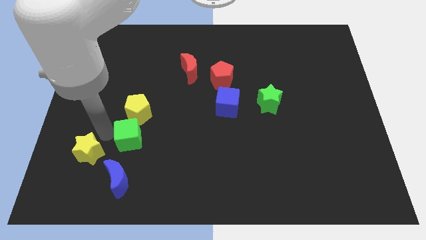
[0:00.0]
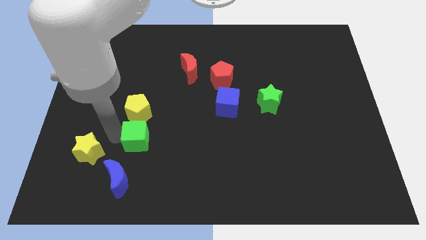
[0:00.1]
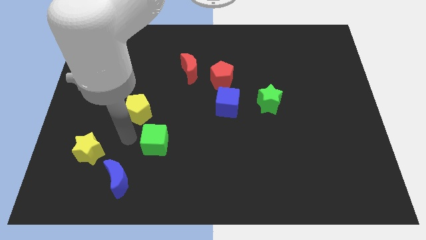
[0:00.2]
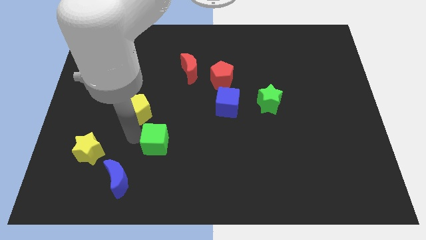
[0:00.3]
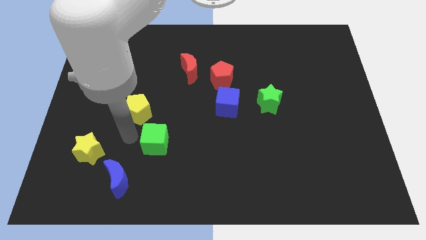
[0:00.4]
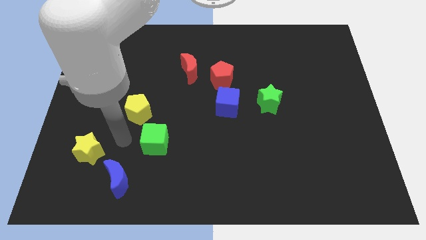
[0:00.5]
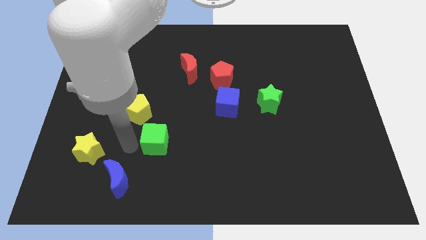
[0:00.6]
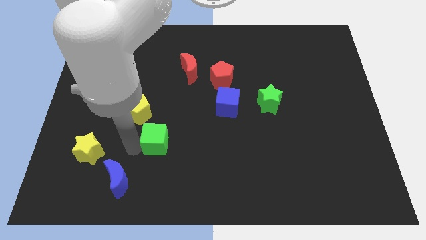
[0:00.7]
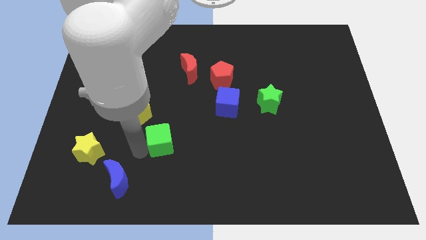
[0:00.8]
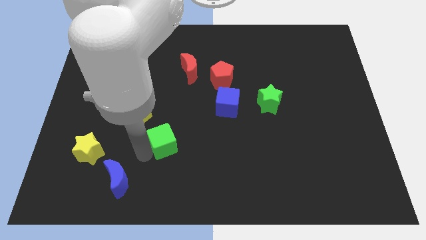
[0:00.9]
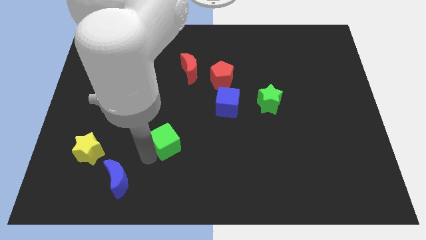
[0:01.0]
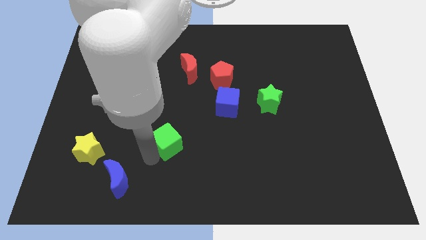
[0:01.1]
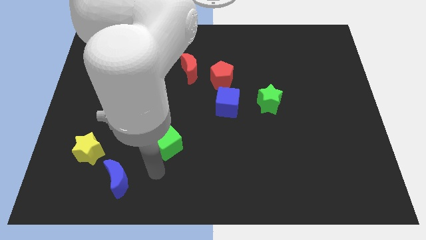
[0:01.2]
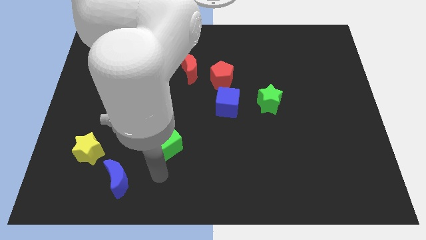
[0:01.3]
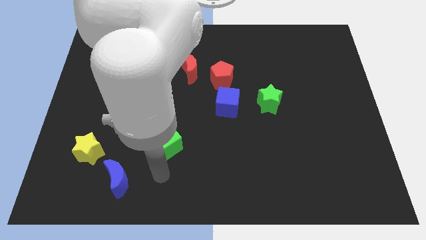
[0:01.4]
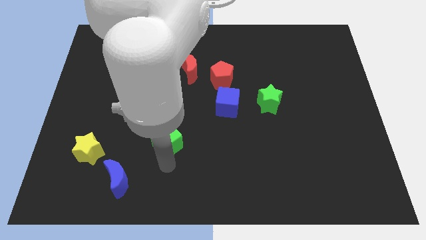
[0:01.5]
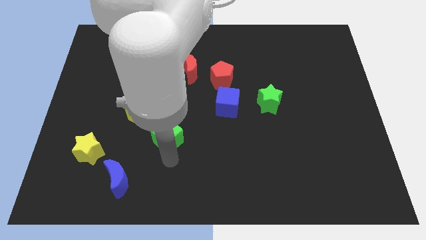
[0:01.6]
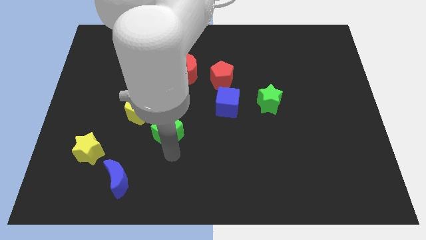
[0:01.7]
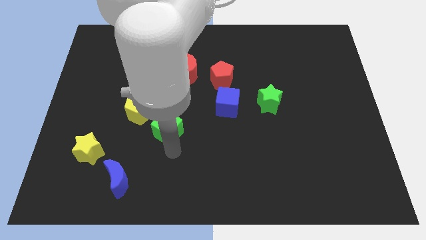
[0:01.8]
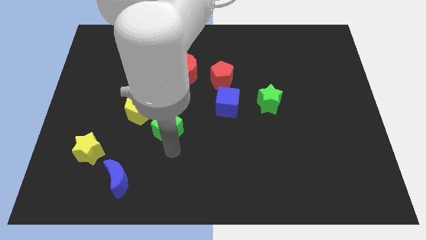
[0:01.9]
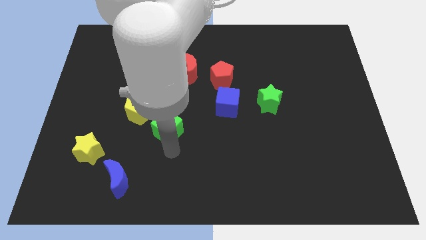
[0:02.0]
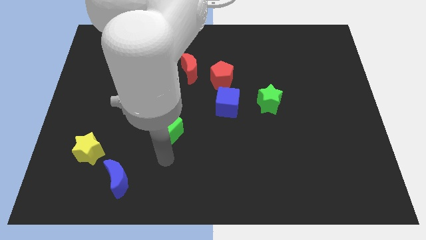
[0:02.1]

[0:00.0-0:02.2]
move green cube to the bottom right of yellow pentagon

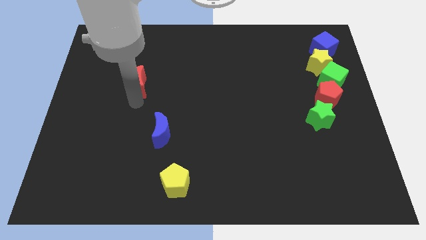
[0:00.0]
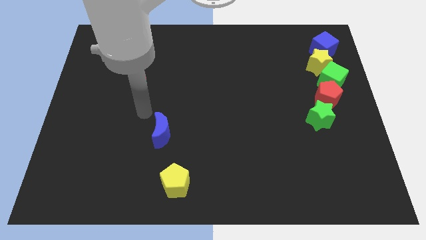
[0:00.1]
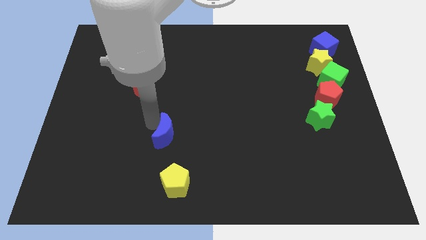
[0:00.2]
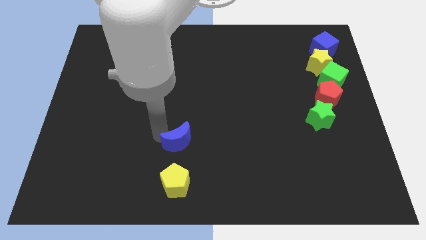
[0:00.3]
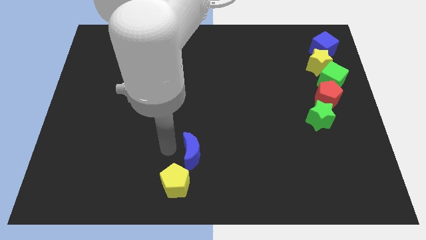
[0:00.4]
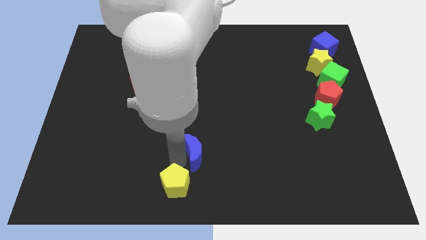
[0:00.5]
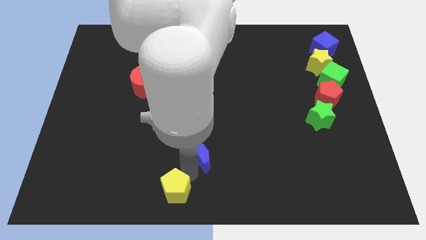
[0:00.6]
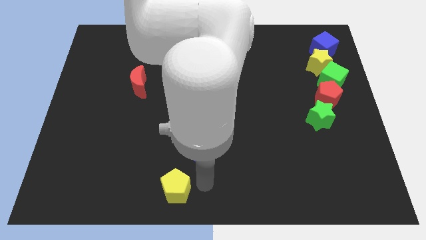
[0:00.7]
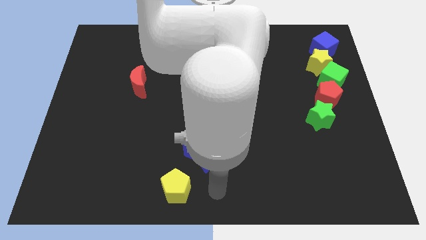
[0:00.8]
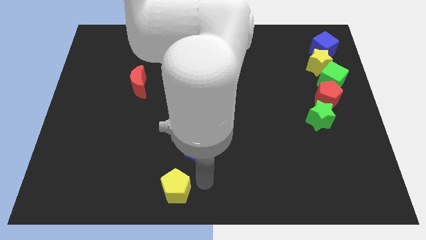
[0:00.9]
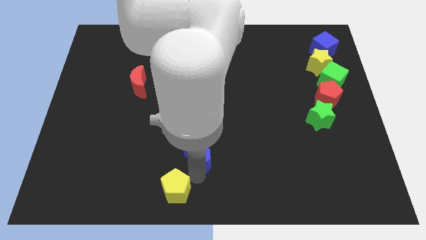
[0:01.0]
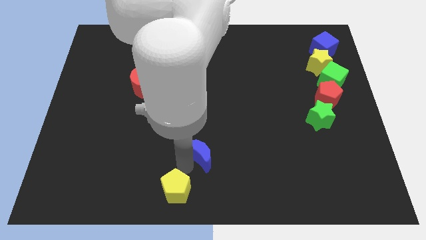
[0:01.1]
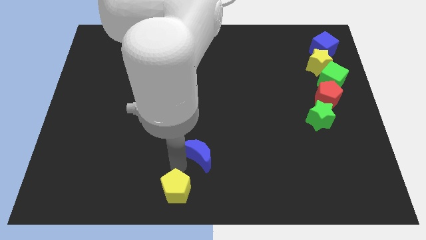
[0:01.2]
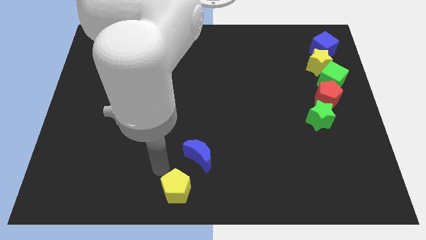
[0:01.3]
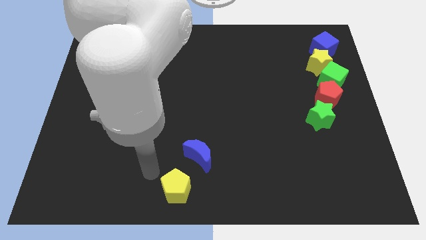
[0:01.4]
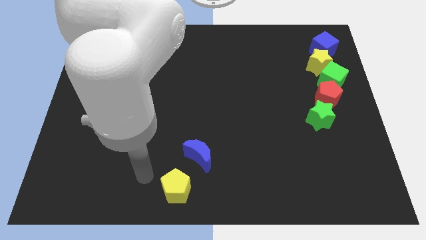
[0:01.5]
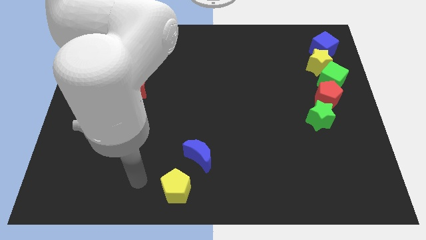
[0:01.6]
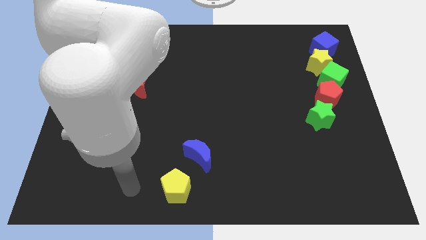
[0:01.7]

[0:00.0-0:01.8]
move the blue moon slightly down

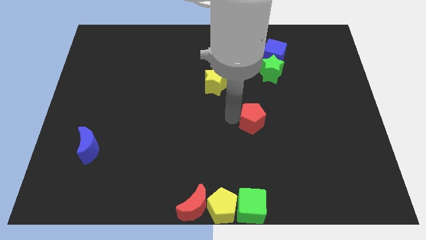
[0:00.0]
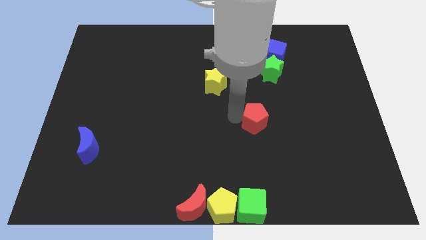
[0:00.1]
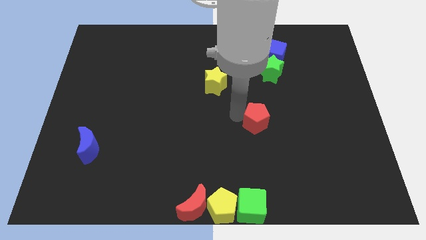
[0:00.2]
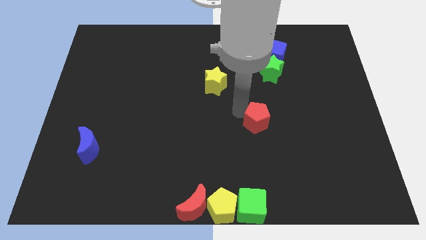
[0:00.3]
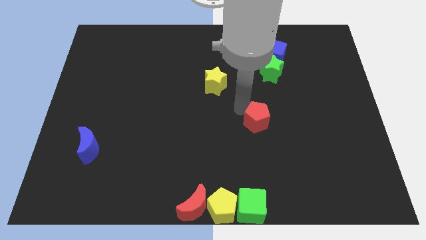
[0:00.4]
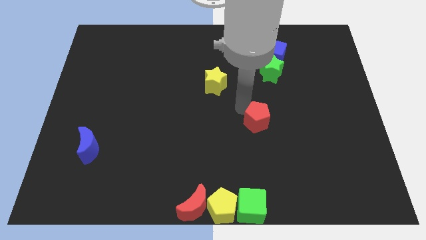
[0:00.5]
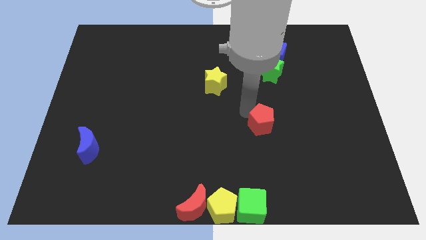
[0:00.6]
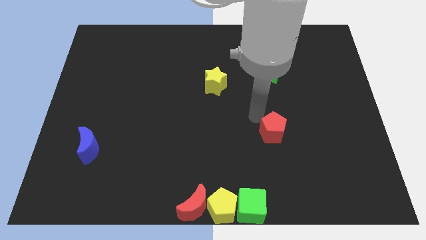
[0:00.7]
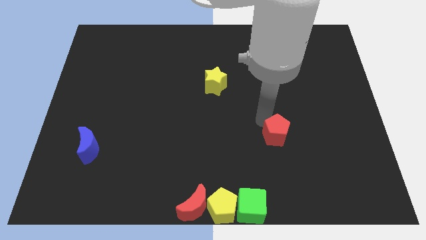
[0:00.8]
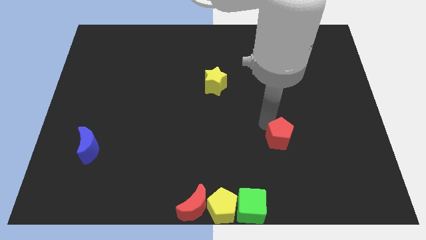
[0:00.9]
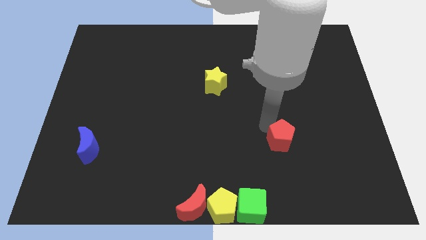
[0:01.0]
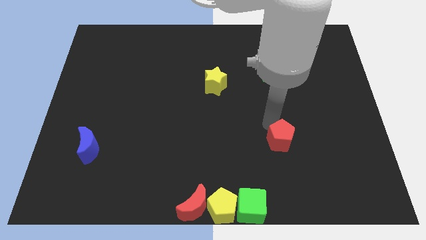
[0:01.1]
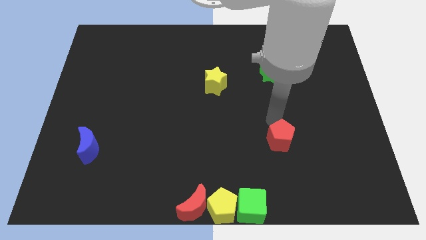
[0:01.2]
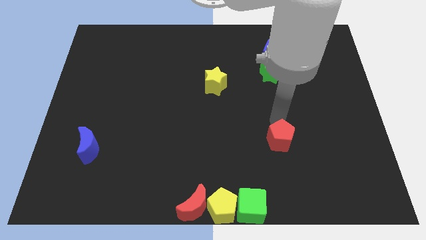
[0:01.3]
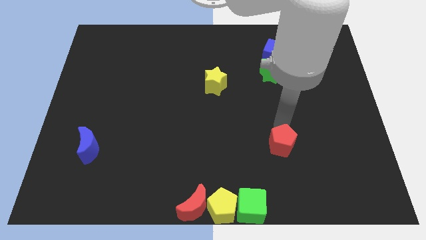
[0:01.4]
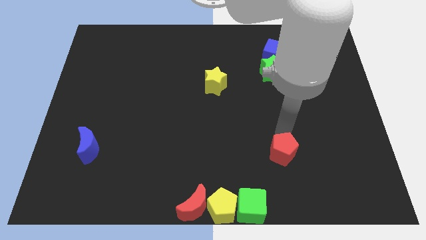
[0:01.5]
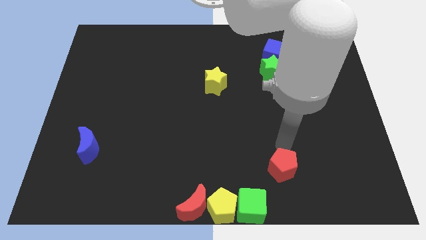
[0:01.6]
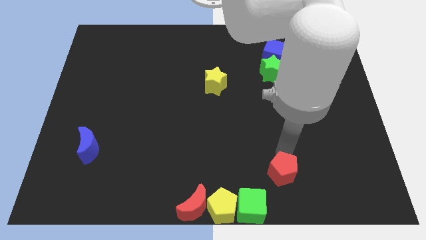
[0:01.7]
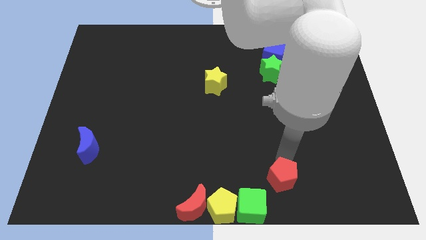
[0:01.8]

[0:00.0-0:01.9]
move the red pentagon towards the bottom center

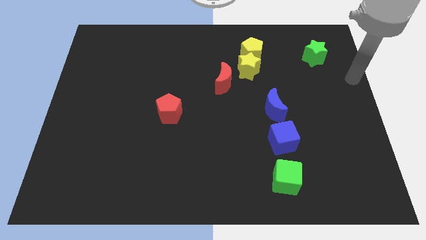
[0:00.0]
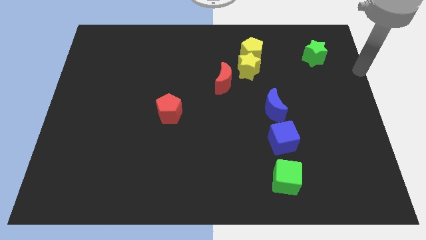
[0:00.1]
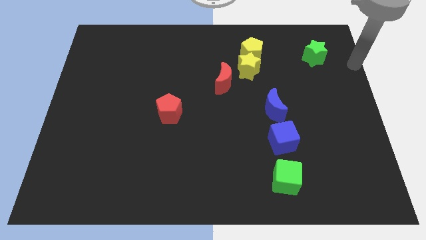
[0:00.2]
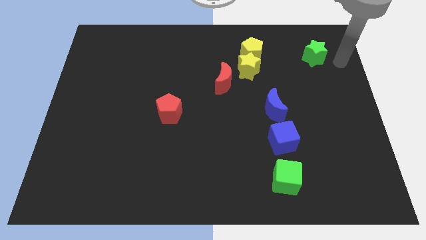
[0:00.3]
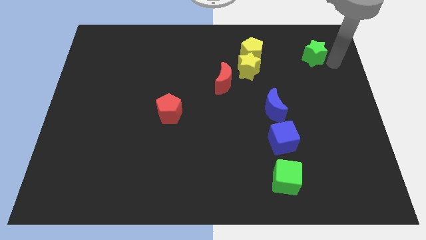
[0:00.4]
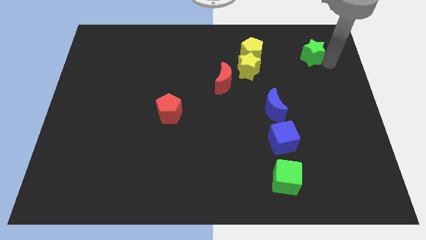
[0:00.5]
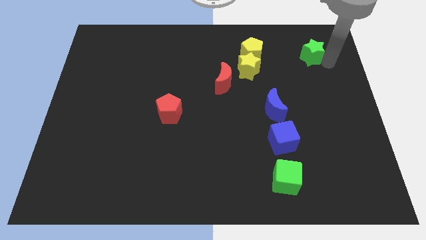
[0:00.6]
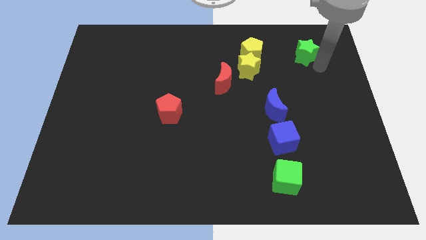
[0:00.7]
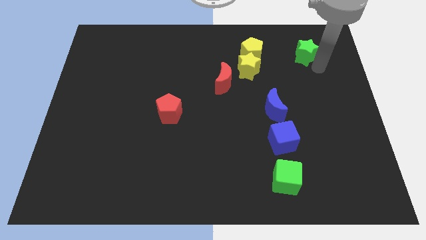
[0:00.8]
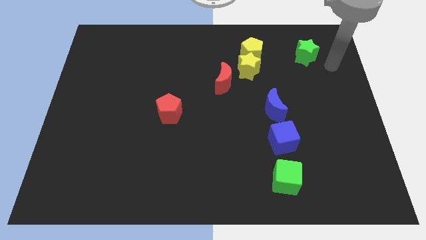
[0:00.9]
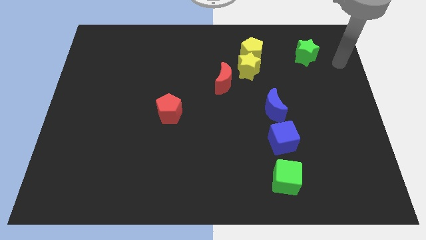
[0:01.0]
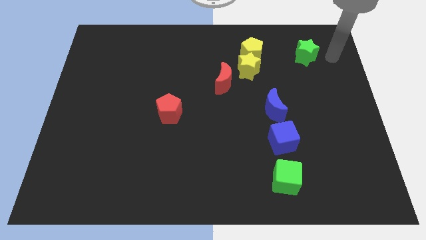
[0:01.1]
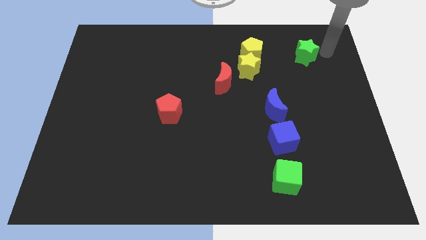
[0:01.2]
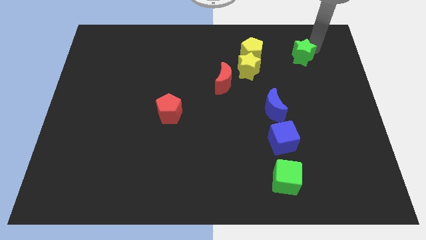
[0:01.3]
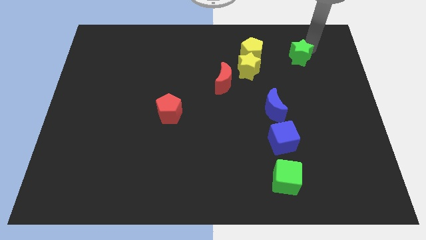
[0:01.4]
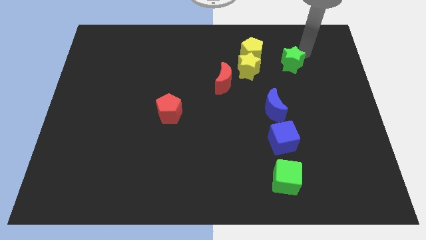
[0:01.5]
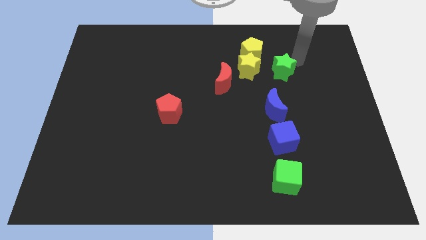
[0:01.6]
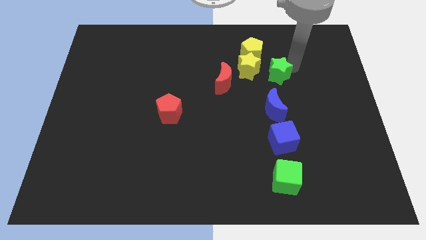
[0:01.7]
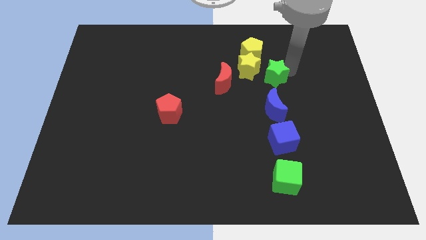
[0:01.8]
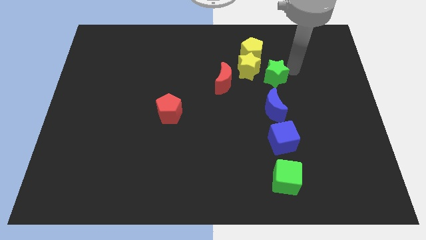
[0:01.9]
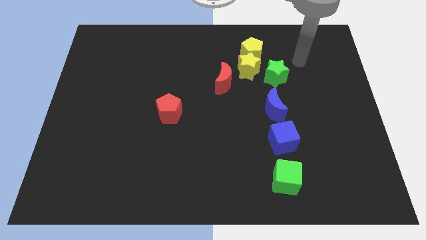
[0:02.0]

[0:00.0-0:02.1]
move the green star towards the yellow star

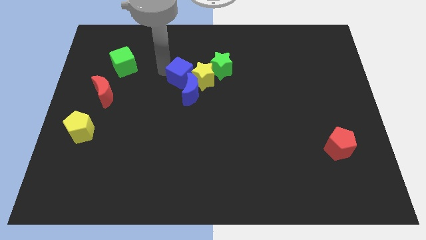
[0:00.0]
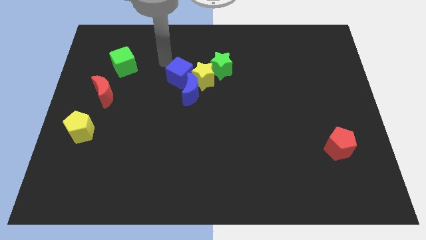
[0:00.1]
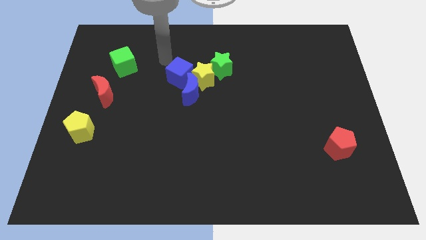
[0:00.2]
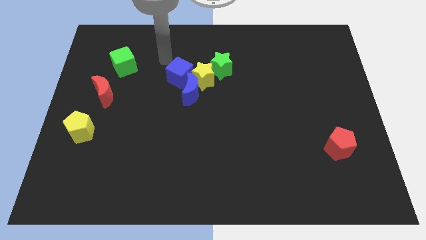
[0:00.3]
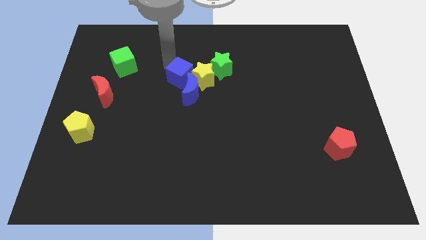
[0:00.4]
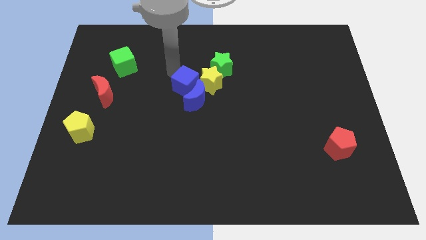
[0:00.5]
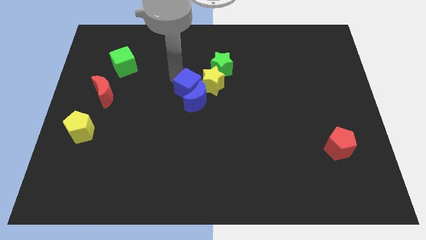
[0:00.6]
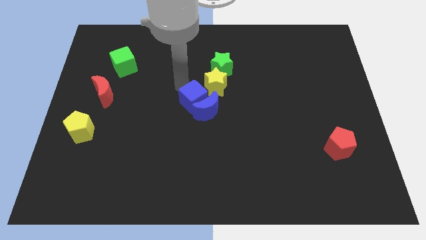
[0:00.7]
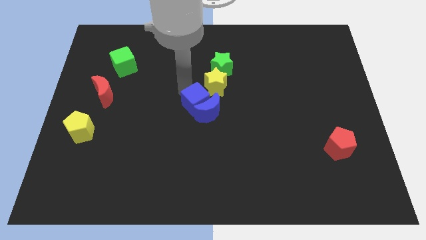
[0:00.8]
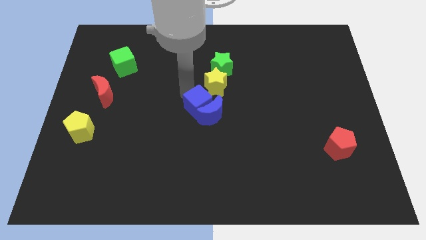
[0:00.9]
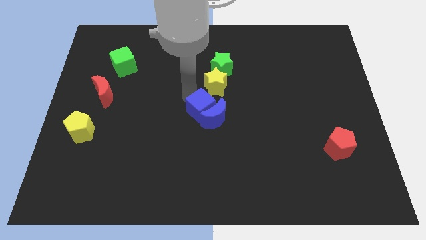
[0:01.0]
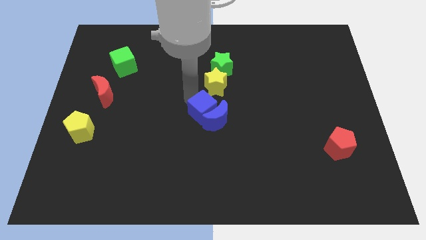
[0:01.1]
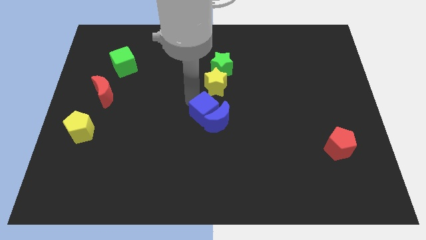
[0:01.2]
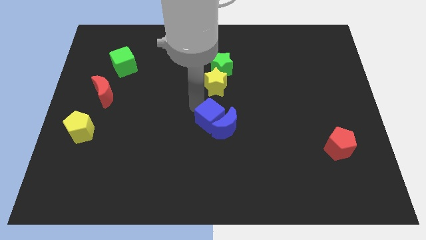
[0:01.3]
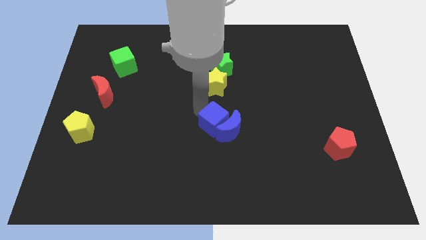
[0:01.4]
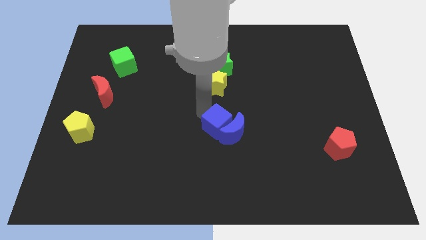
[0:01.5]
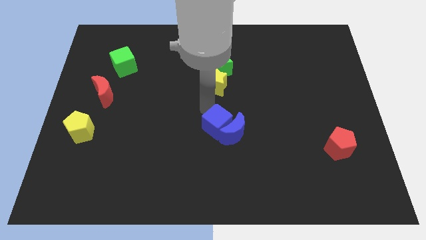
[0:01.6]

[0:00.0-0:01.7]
move the blue crescent with the blue cube
